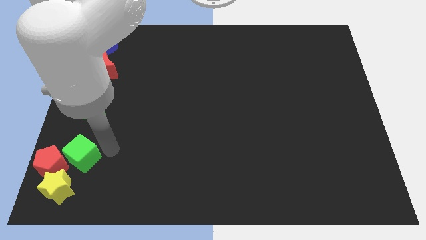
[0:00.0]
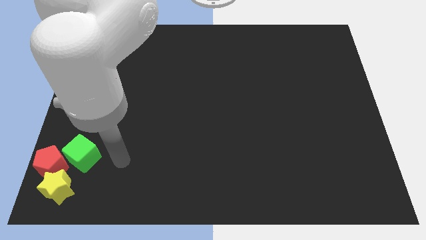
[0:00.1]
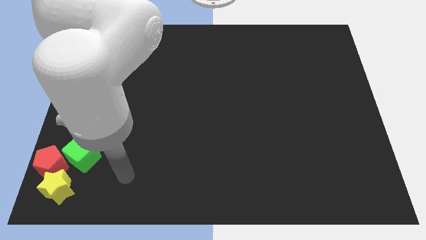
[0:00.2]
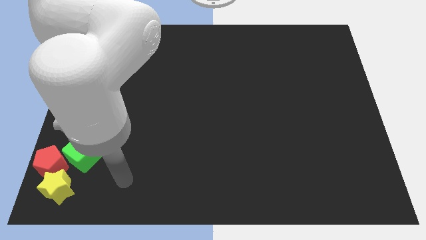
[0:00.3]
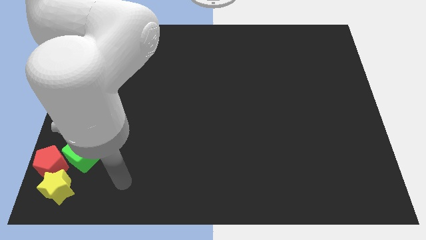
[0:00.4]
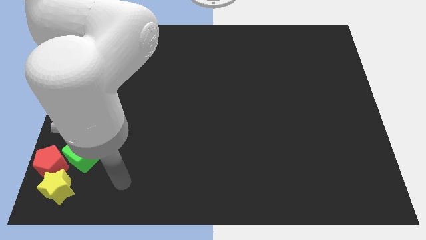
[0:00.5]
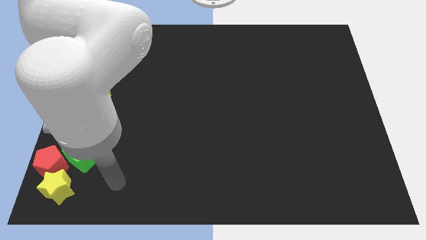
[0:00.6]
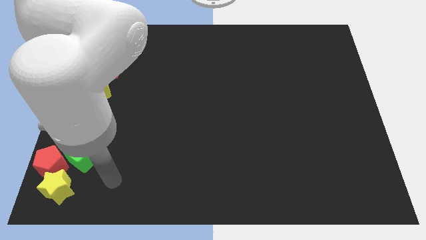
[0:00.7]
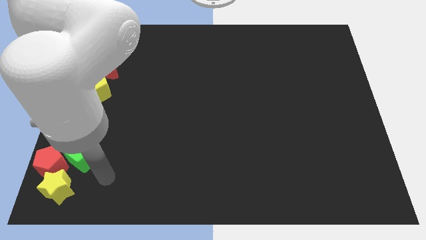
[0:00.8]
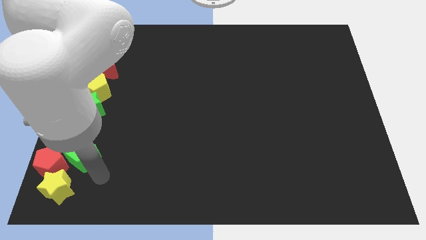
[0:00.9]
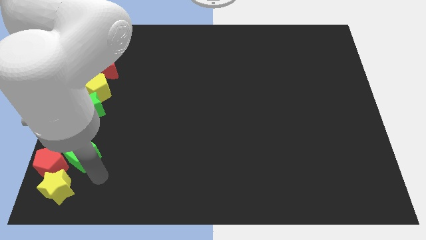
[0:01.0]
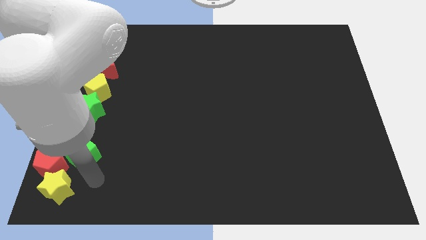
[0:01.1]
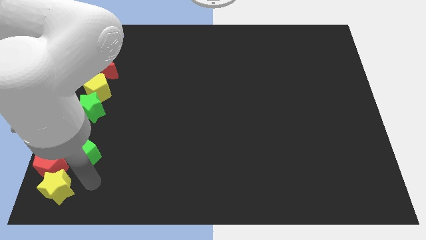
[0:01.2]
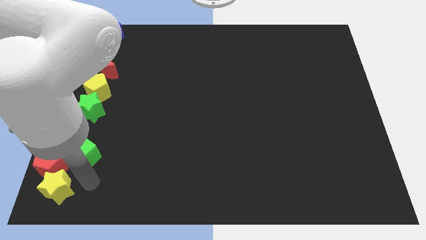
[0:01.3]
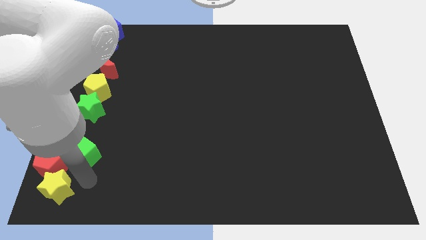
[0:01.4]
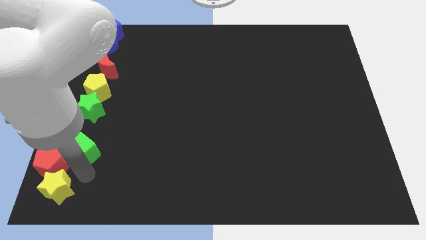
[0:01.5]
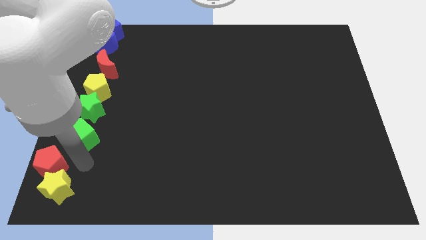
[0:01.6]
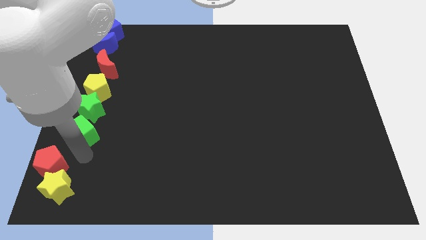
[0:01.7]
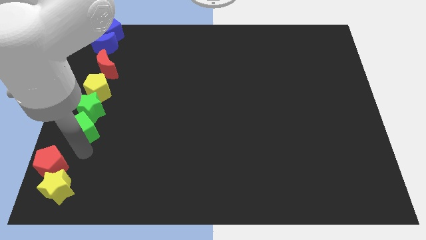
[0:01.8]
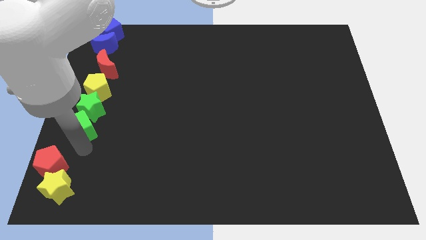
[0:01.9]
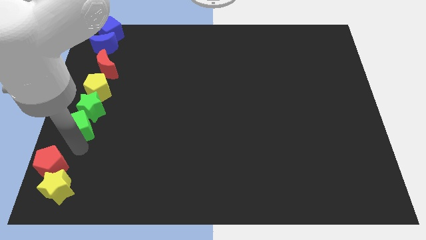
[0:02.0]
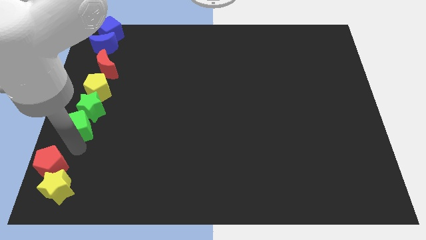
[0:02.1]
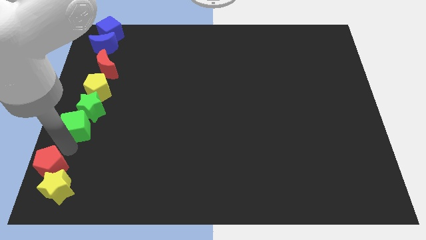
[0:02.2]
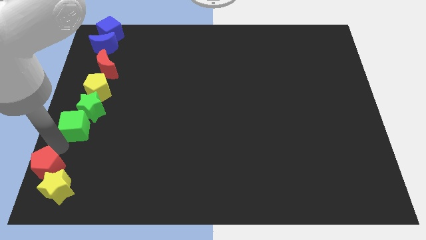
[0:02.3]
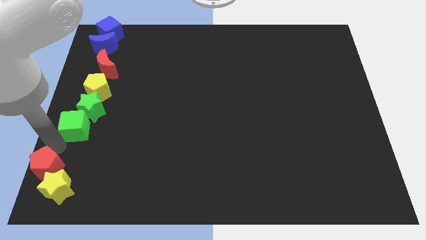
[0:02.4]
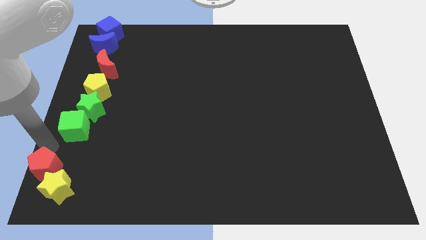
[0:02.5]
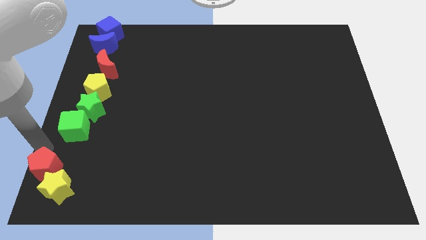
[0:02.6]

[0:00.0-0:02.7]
move the green cube to the bottom of the green star

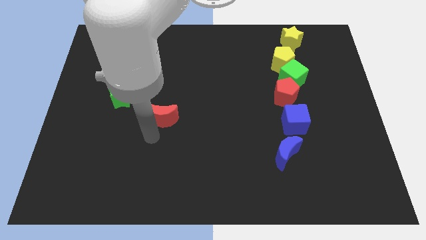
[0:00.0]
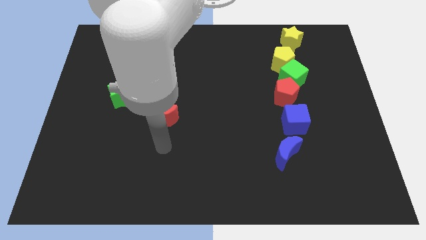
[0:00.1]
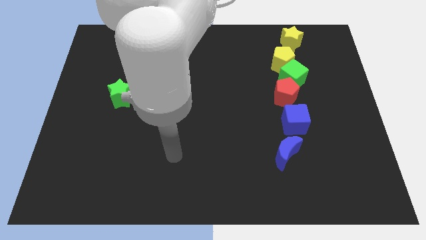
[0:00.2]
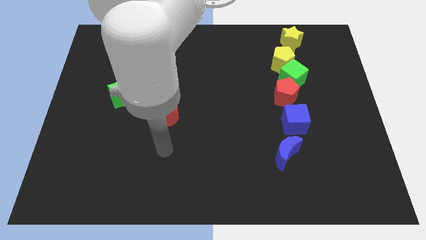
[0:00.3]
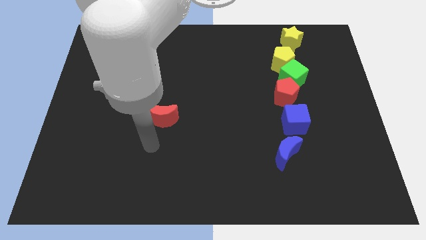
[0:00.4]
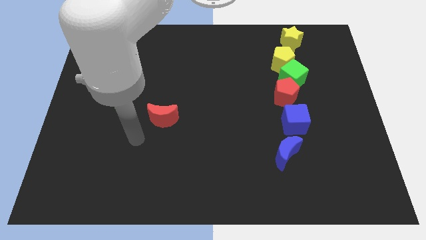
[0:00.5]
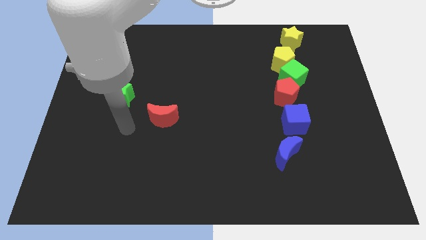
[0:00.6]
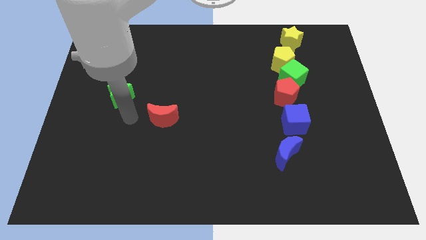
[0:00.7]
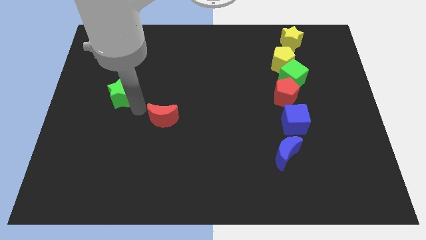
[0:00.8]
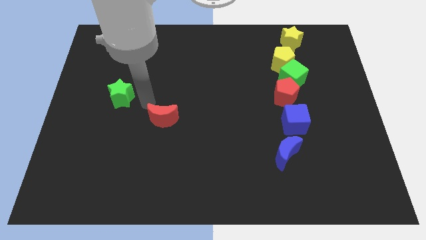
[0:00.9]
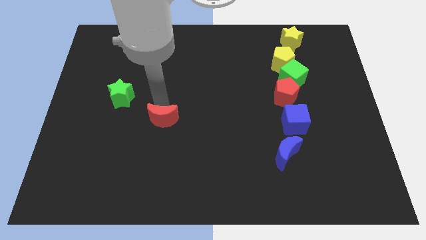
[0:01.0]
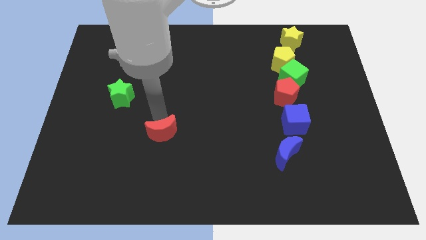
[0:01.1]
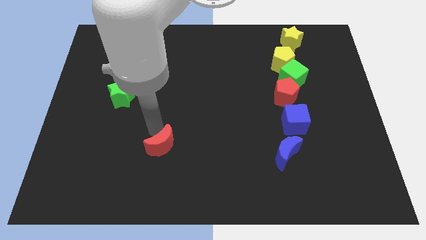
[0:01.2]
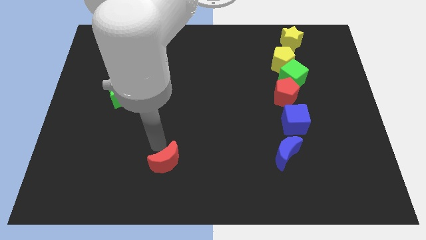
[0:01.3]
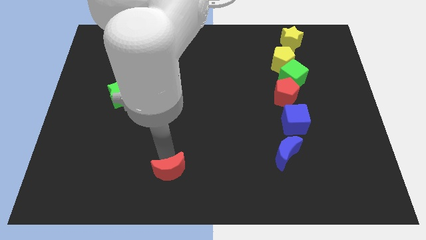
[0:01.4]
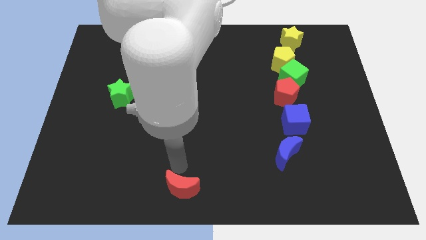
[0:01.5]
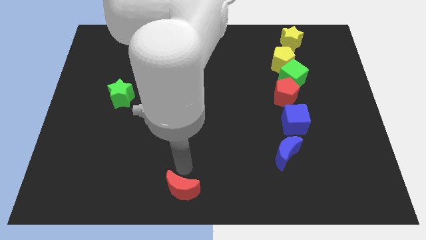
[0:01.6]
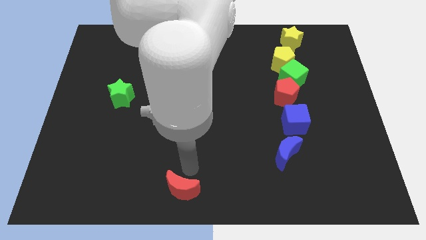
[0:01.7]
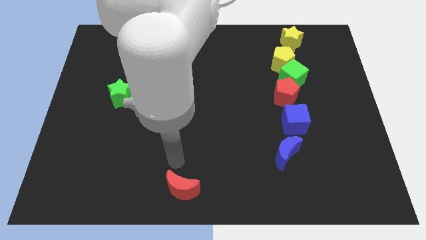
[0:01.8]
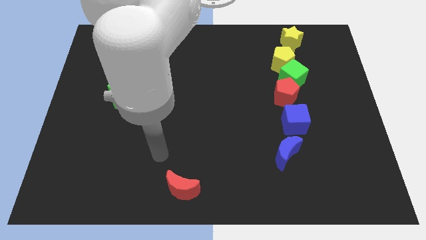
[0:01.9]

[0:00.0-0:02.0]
push red moon to the bottom left

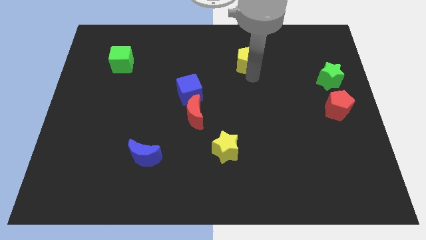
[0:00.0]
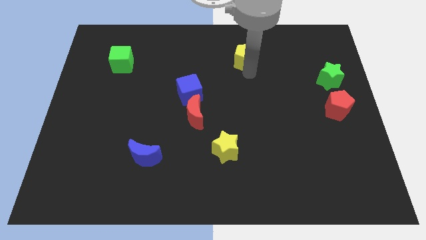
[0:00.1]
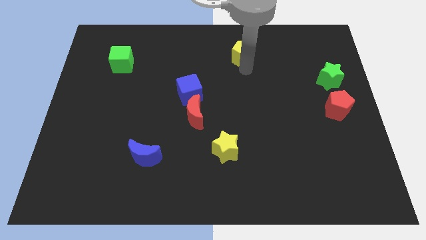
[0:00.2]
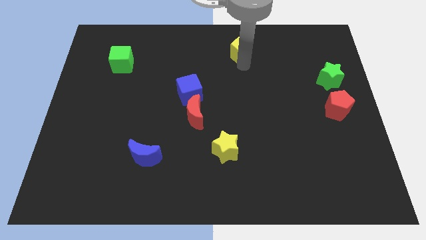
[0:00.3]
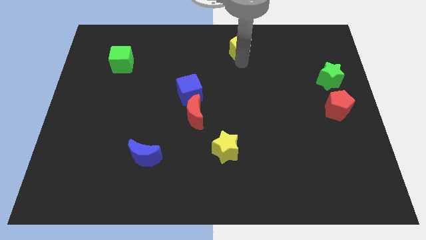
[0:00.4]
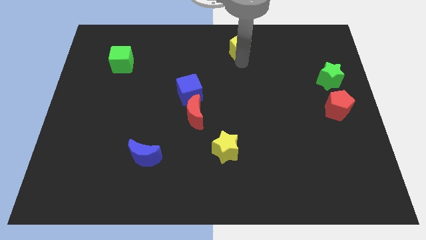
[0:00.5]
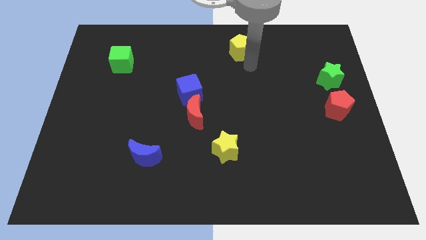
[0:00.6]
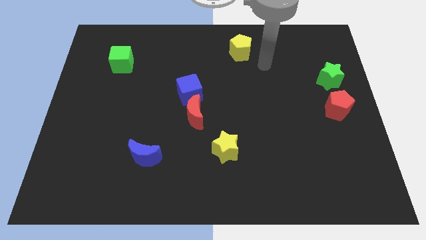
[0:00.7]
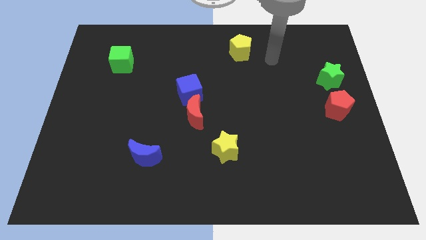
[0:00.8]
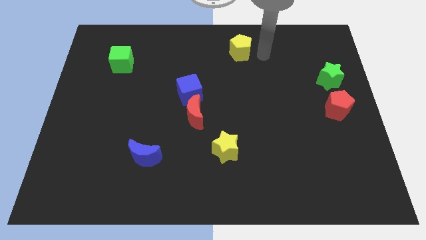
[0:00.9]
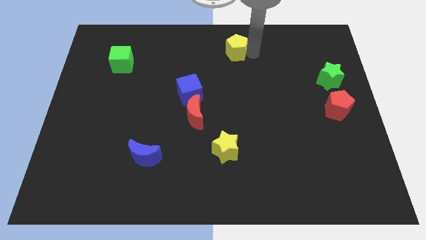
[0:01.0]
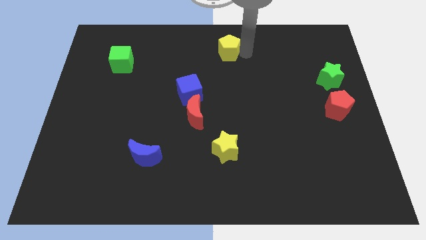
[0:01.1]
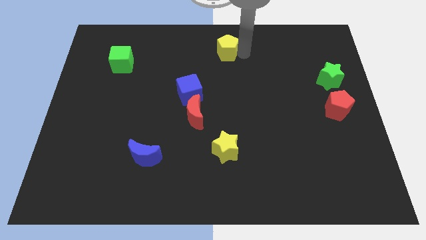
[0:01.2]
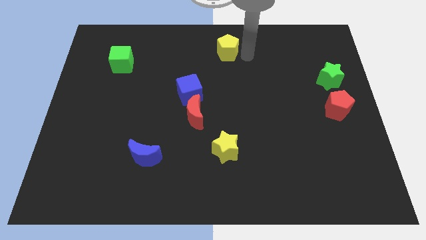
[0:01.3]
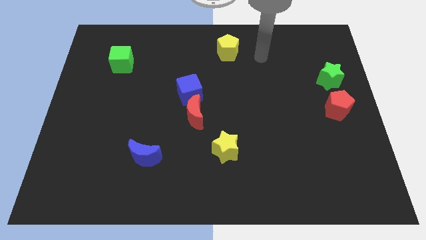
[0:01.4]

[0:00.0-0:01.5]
push the yellow pentagon towards the top center

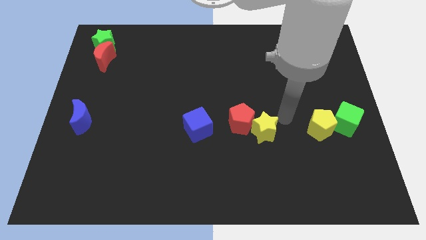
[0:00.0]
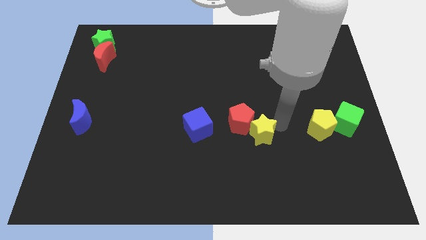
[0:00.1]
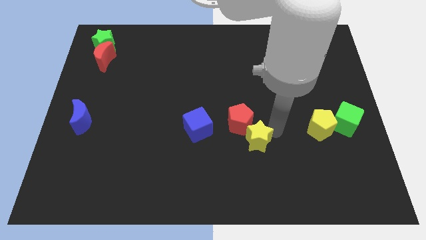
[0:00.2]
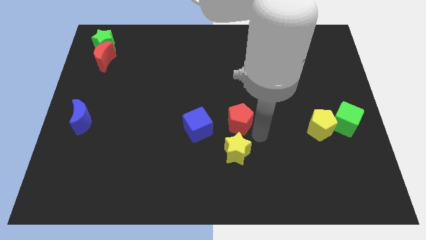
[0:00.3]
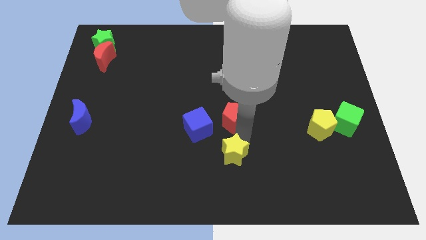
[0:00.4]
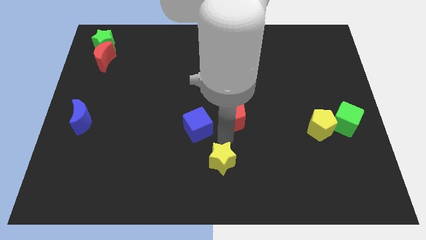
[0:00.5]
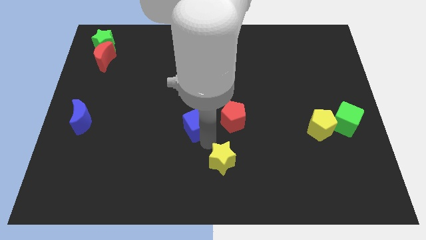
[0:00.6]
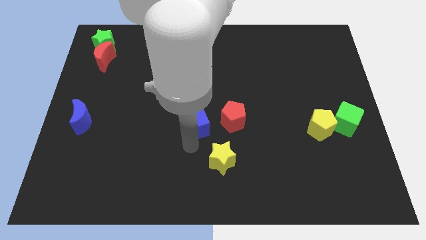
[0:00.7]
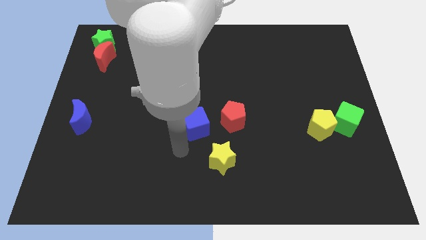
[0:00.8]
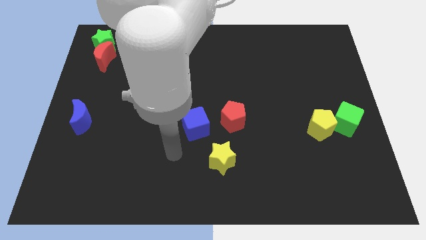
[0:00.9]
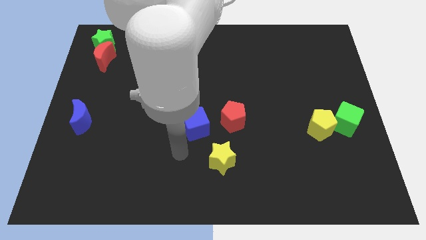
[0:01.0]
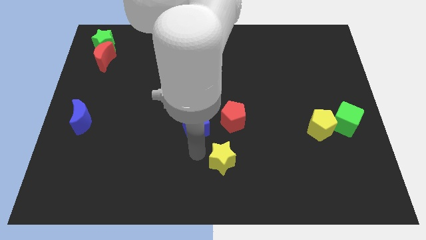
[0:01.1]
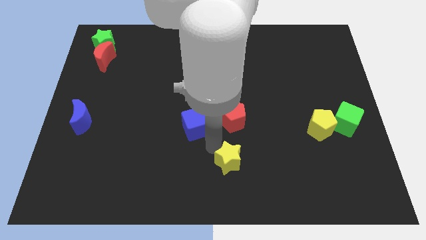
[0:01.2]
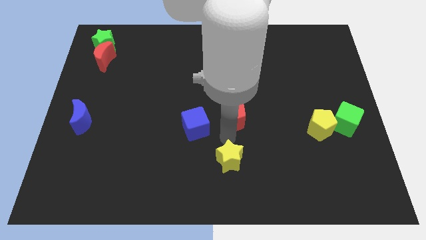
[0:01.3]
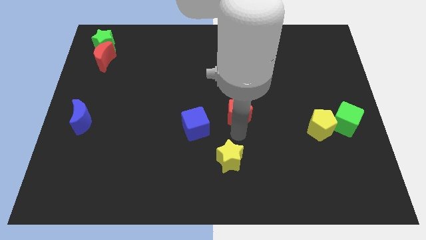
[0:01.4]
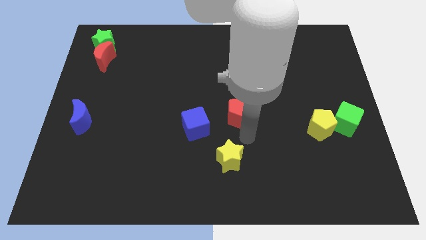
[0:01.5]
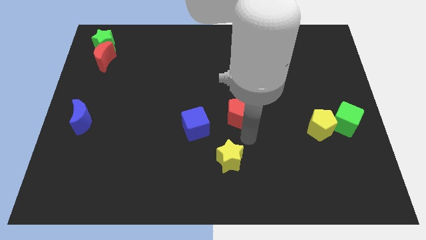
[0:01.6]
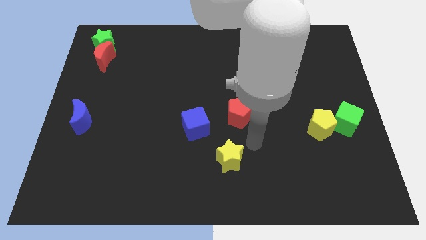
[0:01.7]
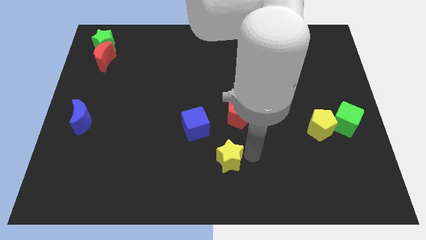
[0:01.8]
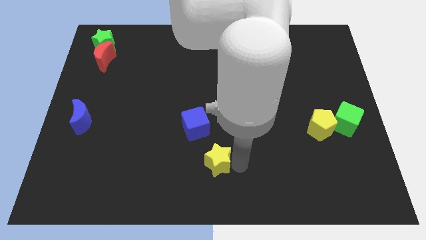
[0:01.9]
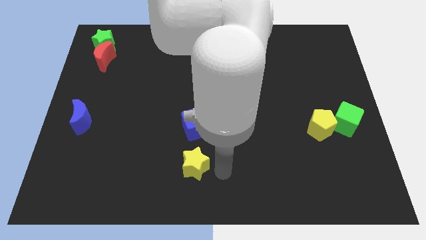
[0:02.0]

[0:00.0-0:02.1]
place the yellow star below the blue cube

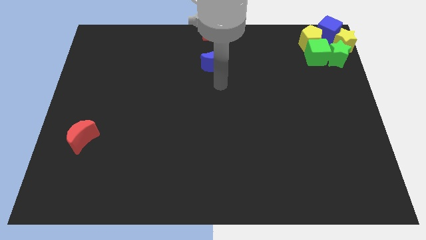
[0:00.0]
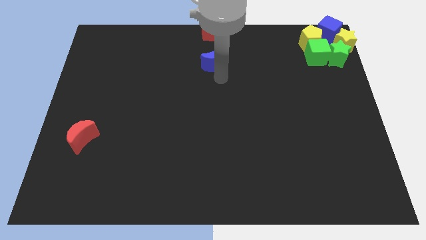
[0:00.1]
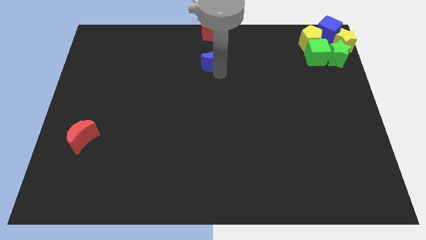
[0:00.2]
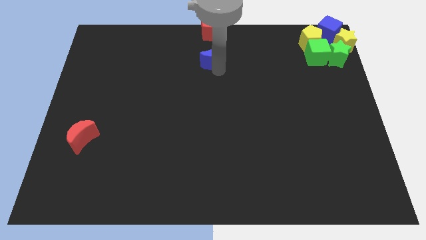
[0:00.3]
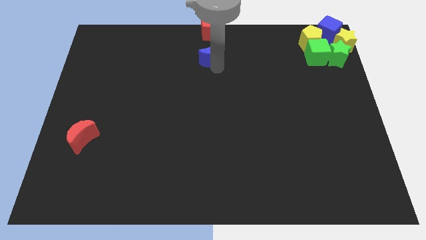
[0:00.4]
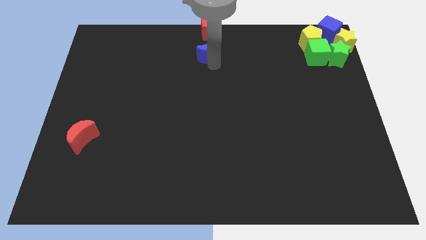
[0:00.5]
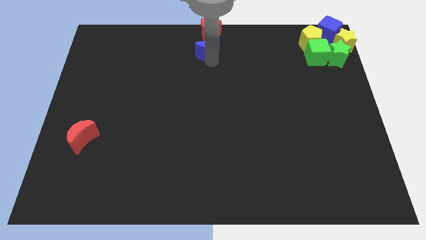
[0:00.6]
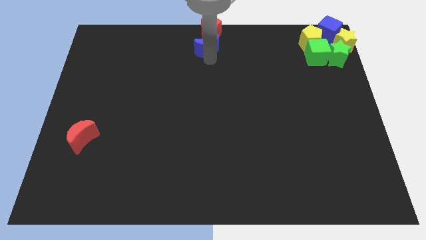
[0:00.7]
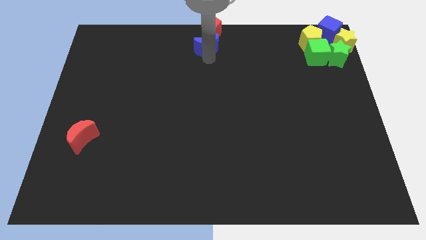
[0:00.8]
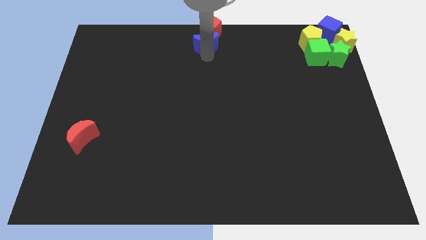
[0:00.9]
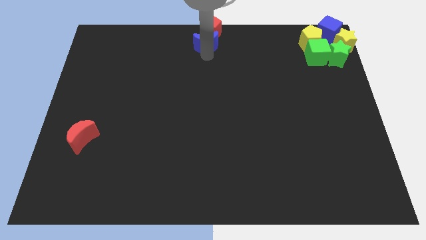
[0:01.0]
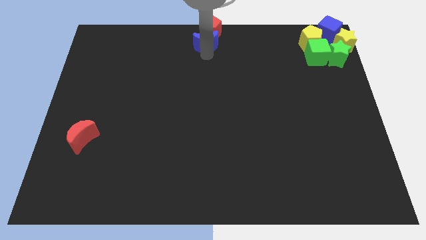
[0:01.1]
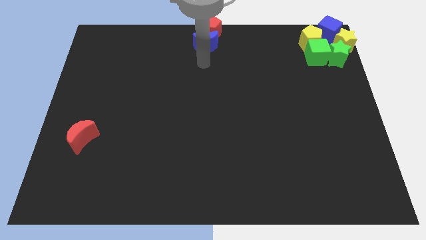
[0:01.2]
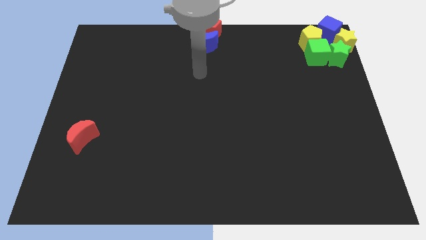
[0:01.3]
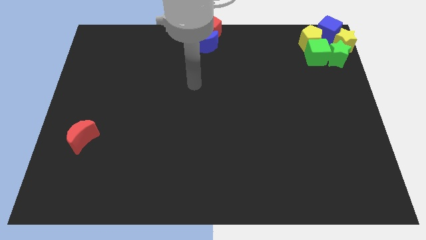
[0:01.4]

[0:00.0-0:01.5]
push the blue moon close to the red pentagon
